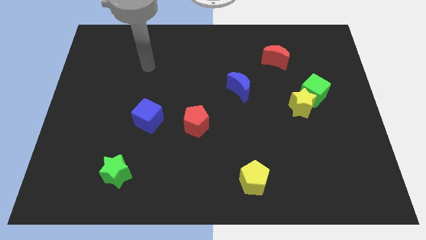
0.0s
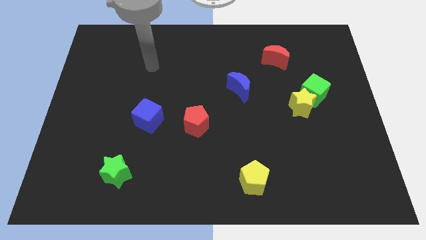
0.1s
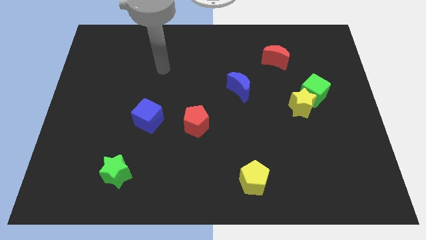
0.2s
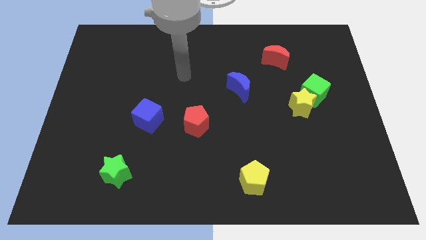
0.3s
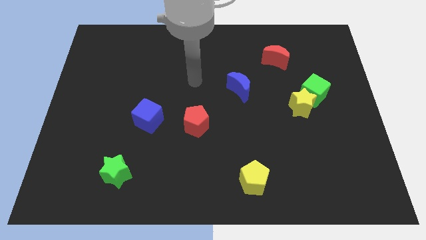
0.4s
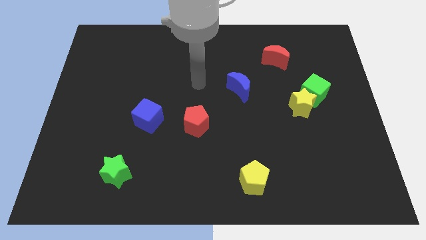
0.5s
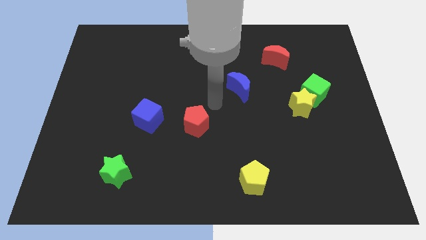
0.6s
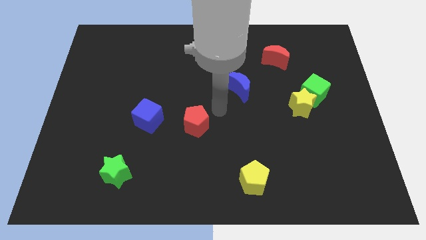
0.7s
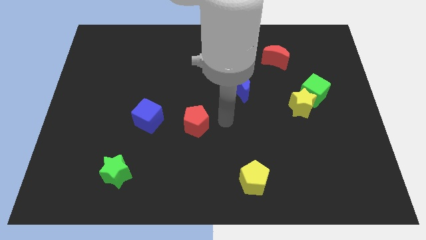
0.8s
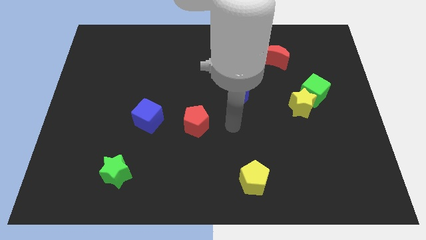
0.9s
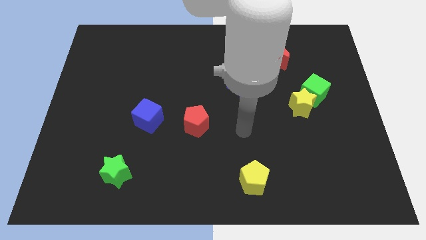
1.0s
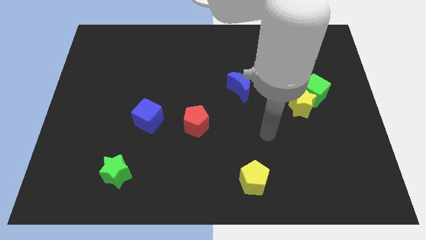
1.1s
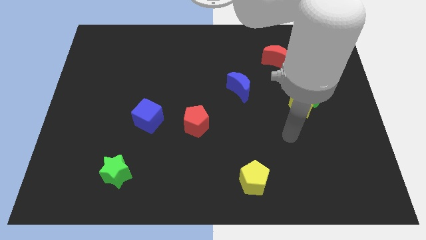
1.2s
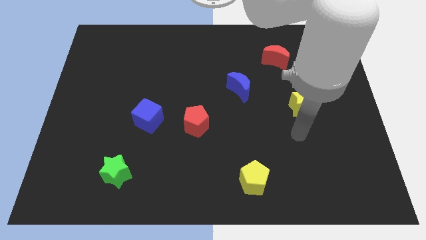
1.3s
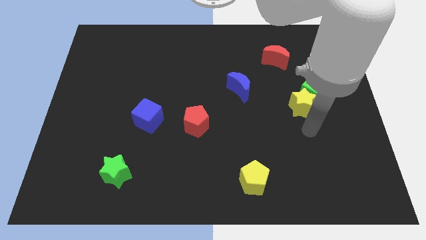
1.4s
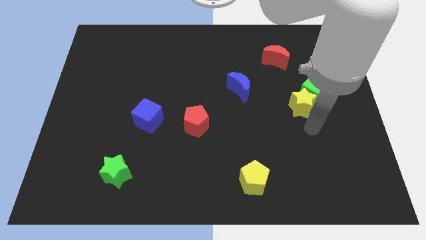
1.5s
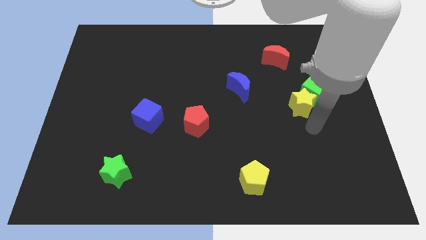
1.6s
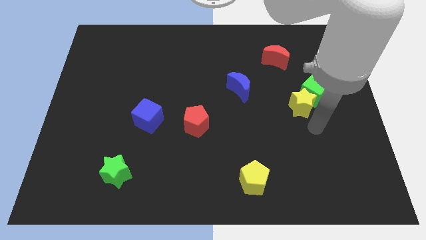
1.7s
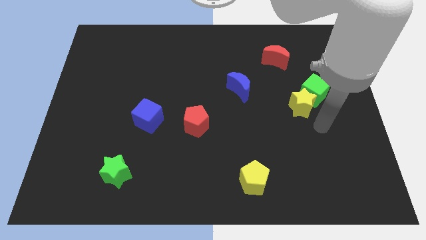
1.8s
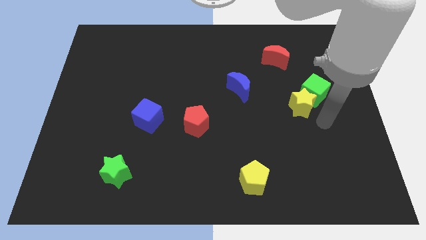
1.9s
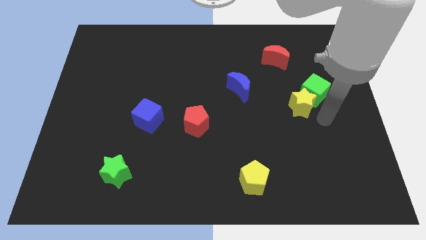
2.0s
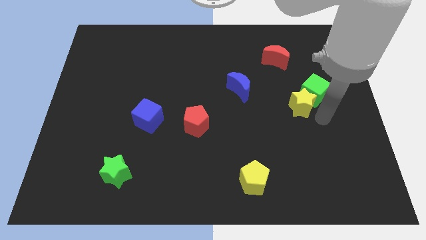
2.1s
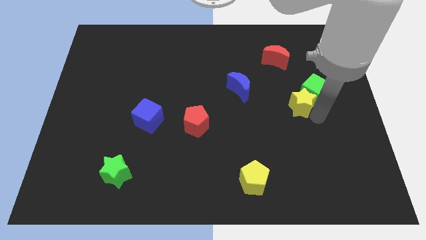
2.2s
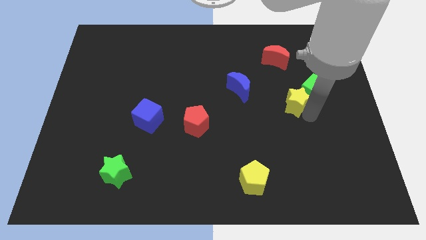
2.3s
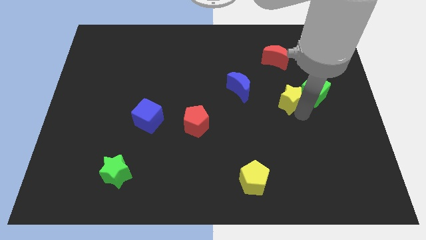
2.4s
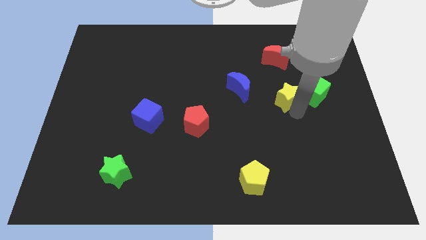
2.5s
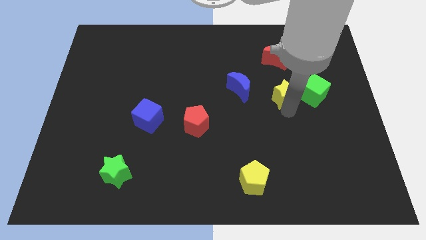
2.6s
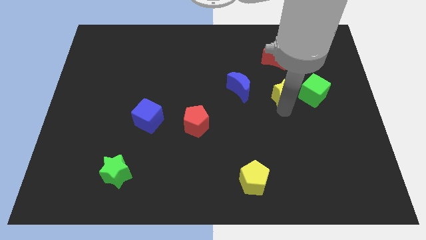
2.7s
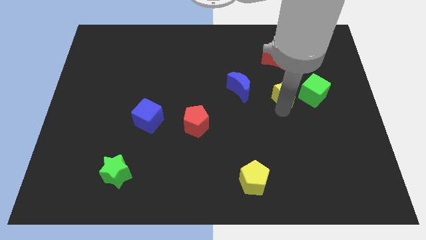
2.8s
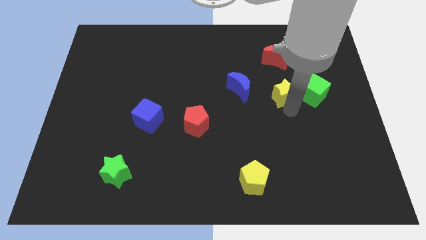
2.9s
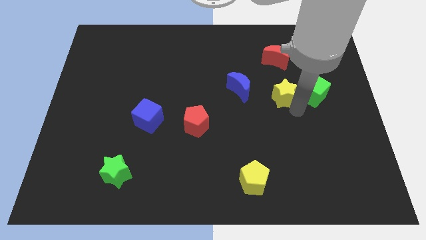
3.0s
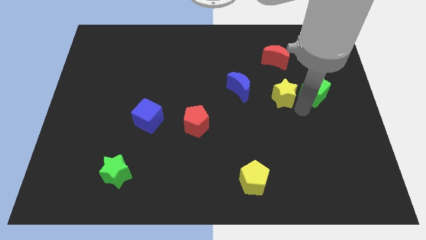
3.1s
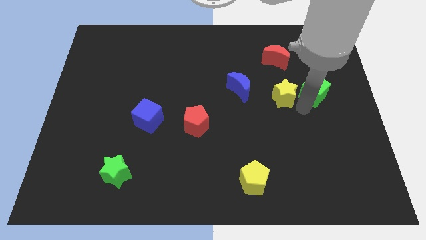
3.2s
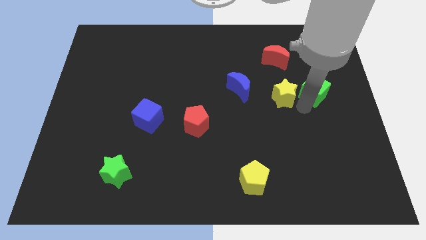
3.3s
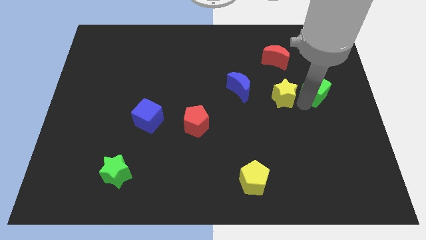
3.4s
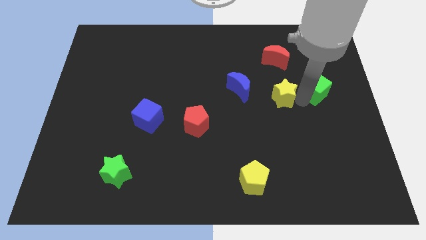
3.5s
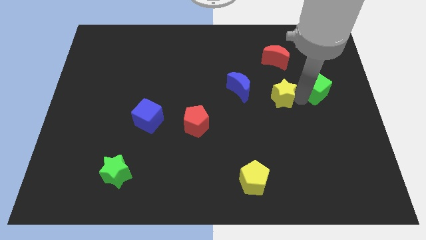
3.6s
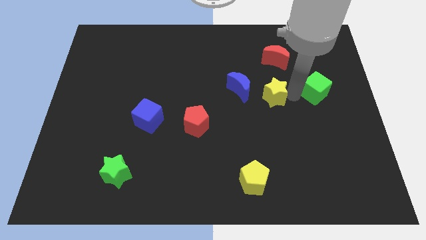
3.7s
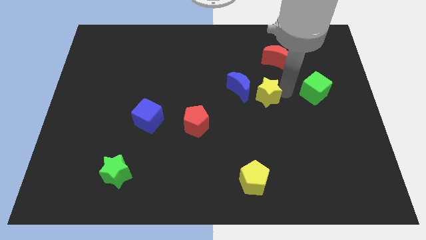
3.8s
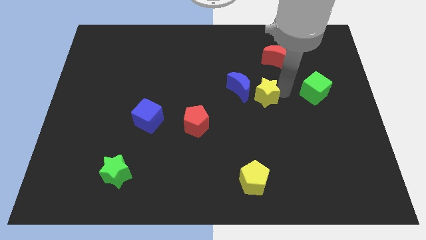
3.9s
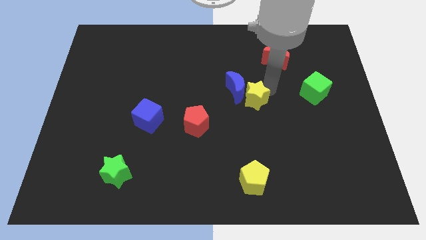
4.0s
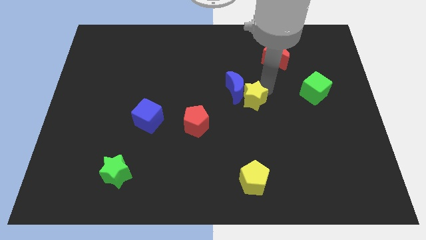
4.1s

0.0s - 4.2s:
push the yellow star towards the blue moon

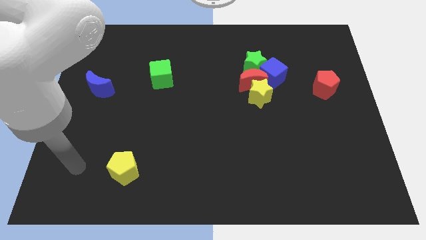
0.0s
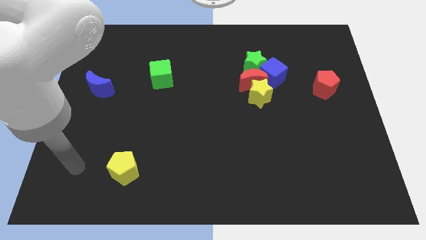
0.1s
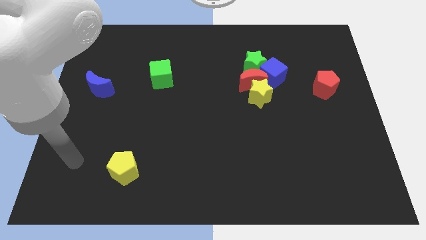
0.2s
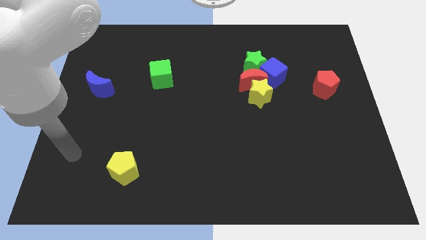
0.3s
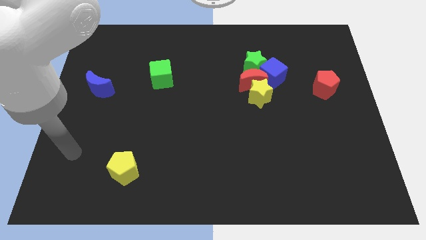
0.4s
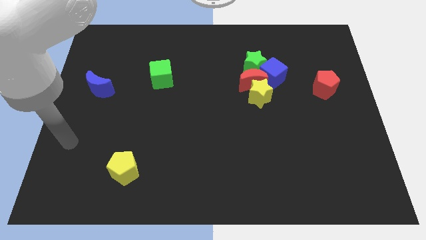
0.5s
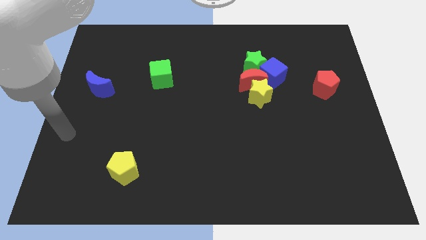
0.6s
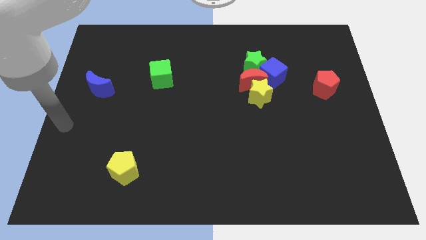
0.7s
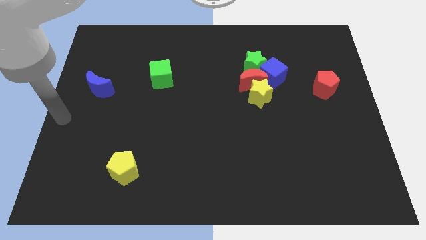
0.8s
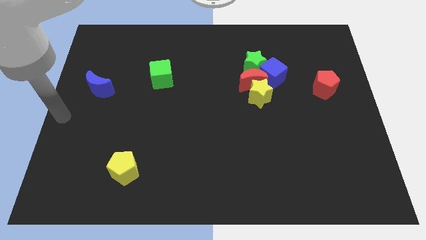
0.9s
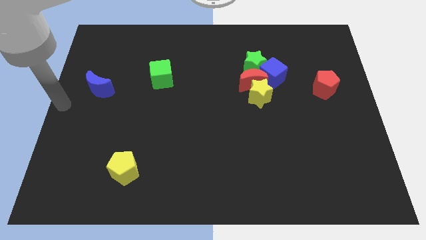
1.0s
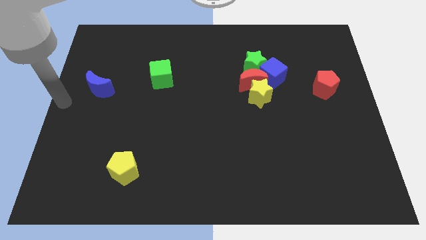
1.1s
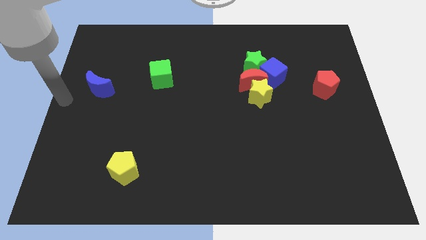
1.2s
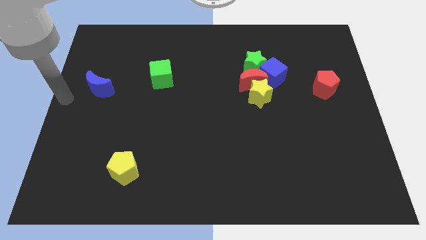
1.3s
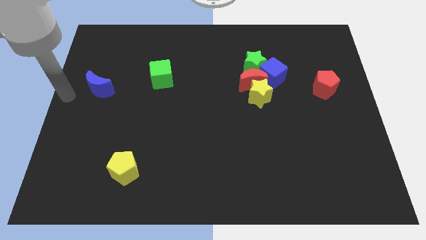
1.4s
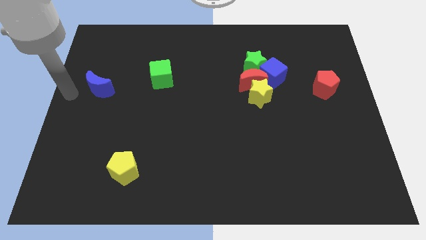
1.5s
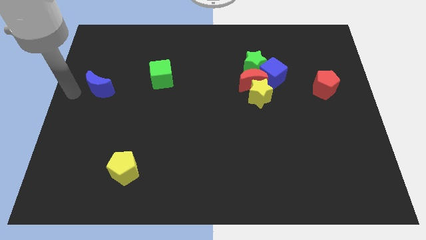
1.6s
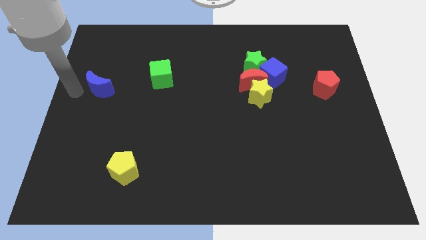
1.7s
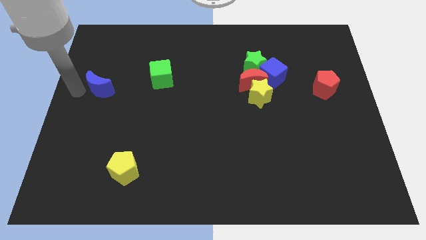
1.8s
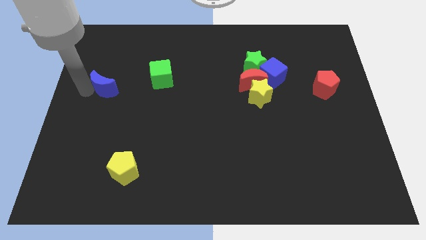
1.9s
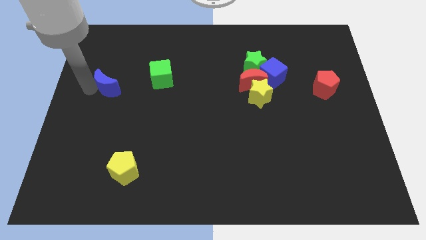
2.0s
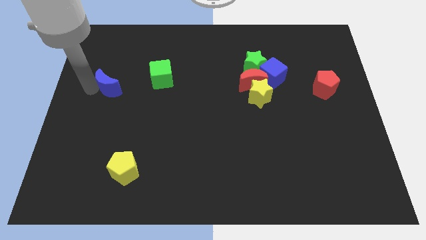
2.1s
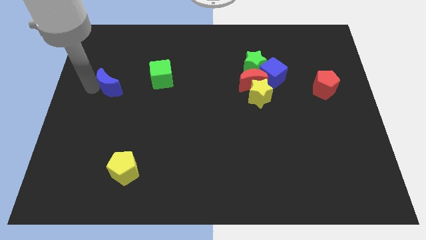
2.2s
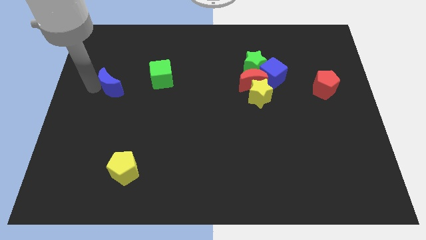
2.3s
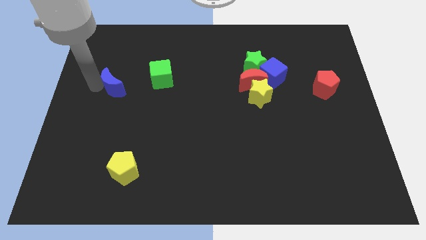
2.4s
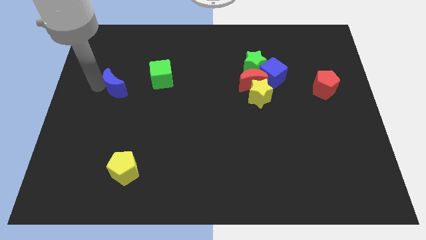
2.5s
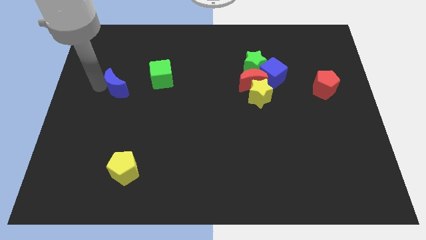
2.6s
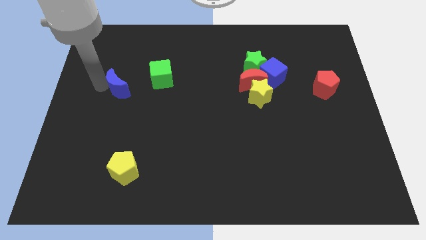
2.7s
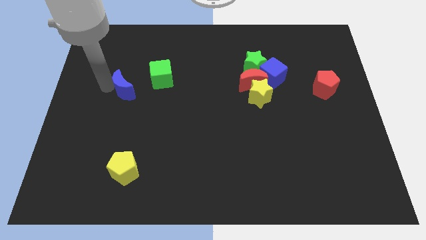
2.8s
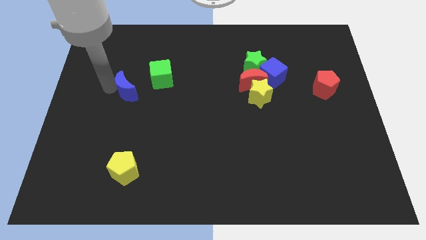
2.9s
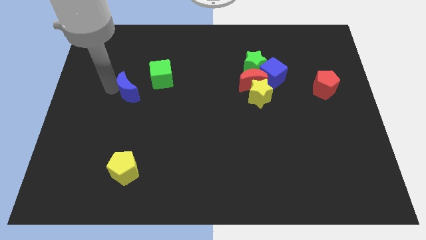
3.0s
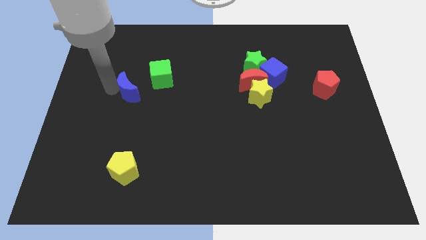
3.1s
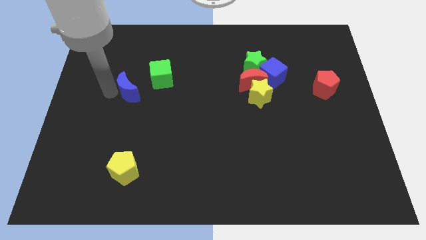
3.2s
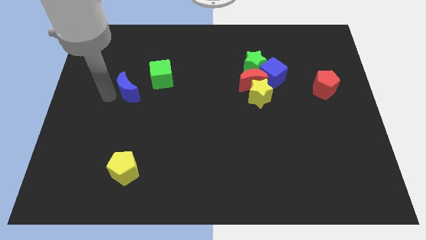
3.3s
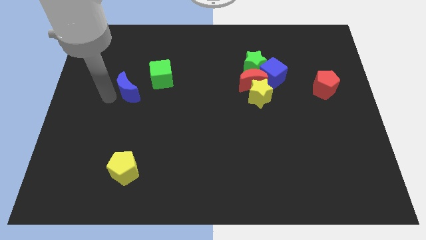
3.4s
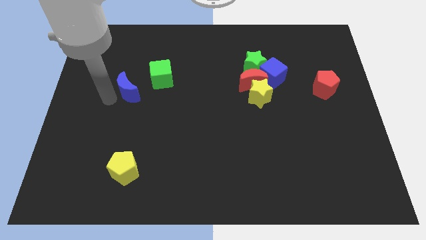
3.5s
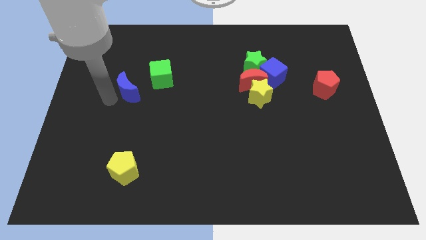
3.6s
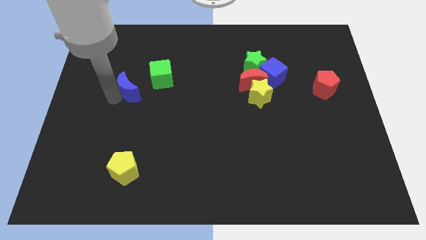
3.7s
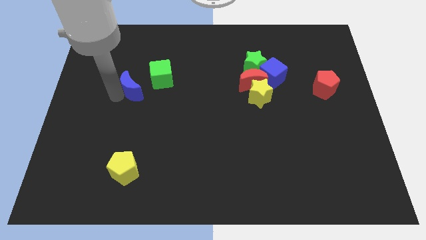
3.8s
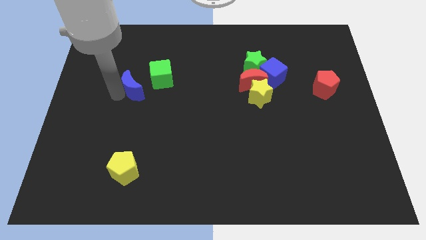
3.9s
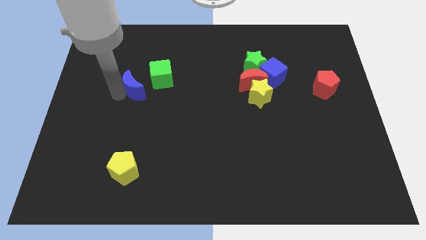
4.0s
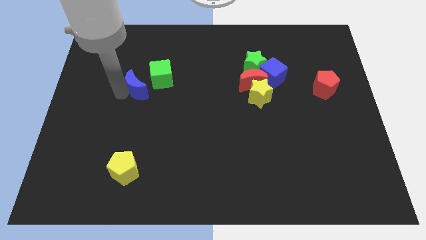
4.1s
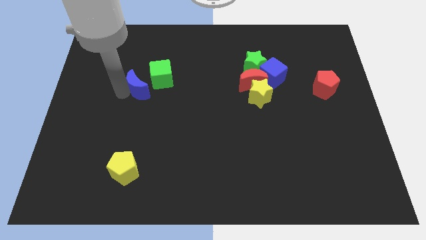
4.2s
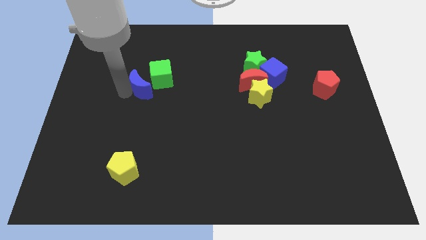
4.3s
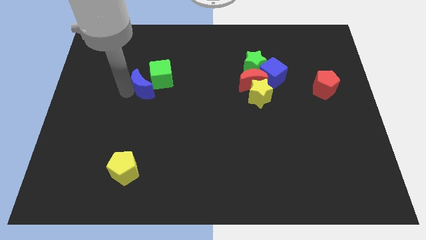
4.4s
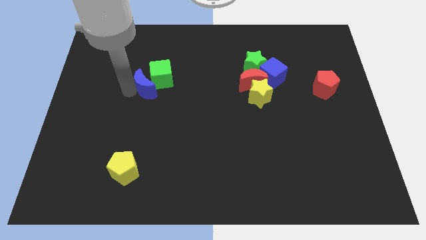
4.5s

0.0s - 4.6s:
move the blue moon next to the green cube
